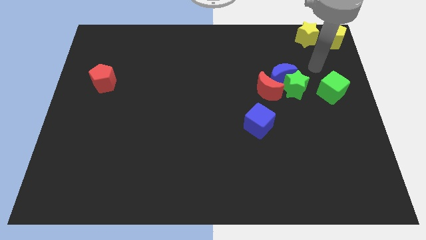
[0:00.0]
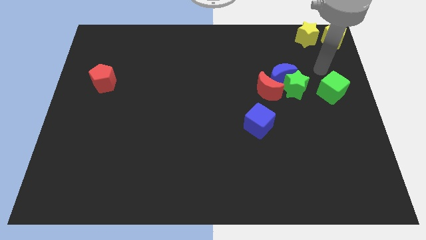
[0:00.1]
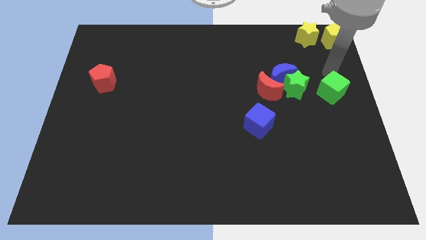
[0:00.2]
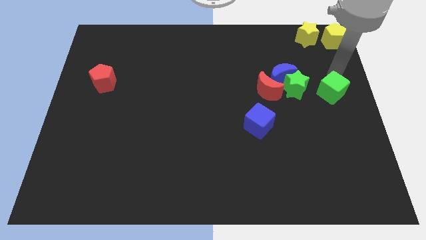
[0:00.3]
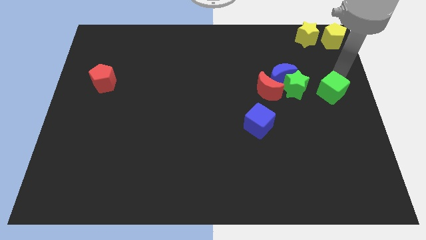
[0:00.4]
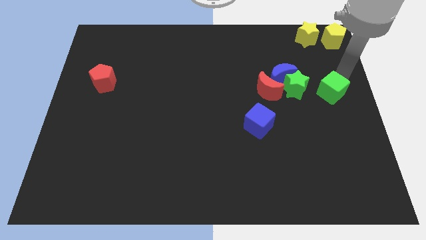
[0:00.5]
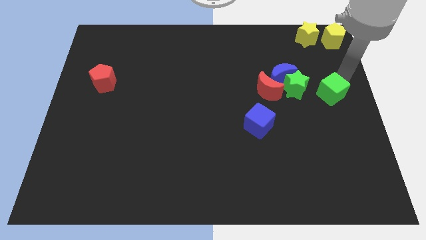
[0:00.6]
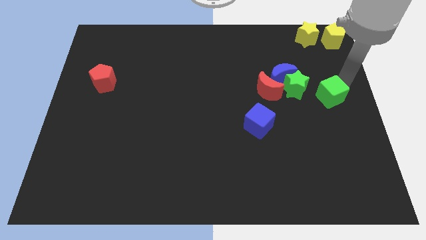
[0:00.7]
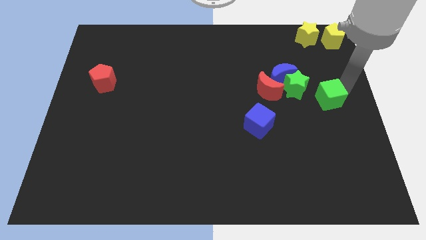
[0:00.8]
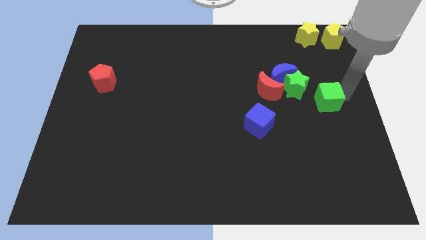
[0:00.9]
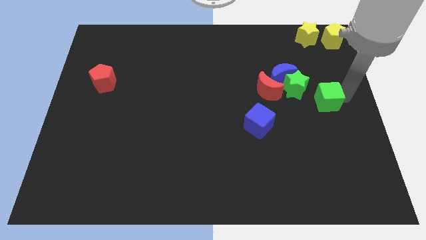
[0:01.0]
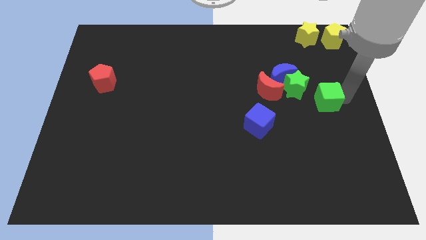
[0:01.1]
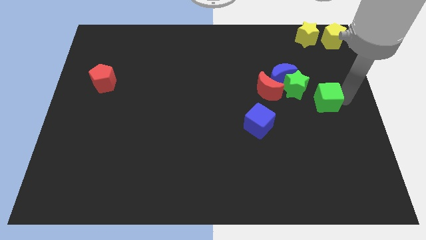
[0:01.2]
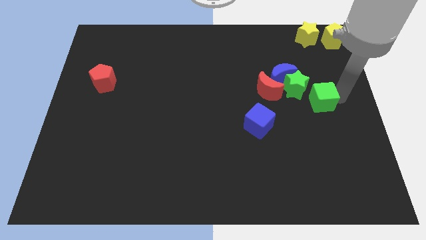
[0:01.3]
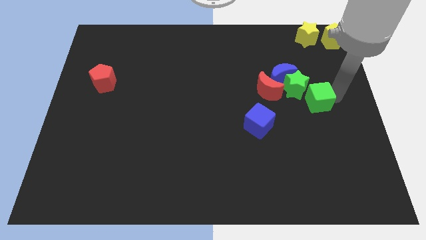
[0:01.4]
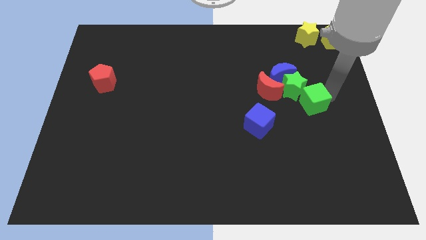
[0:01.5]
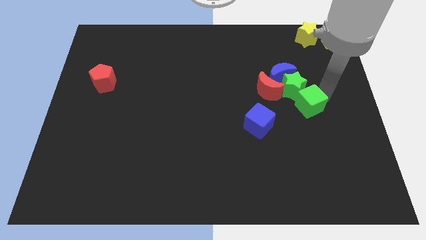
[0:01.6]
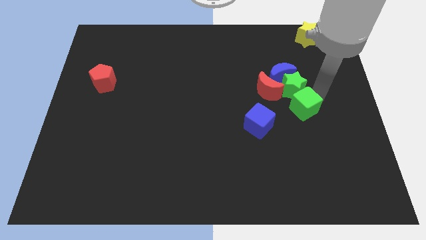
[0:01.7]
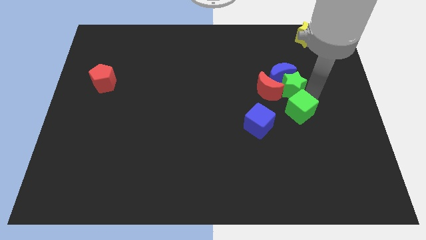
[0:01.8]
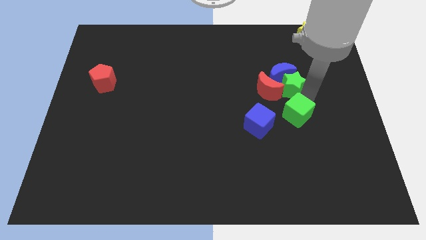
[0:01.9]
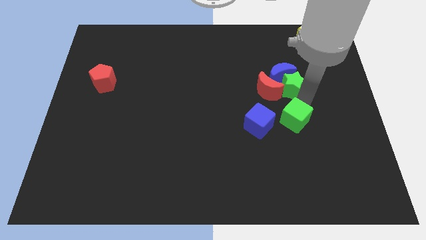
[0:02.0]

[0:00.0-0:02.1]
move the green cube to the bottom right side of the green star

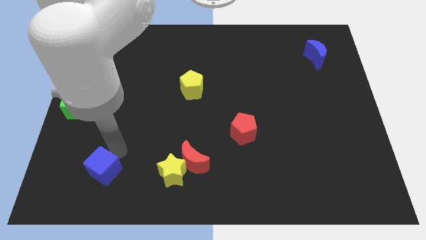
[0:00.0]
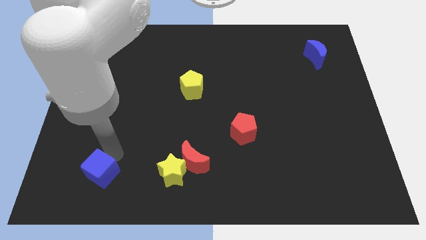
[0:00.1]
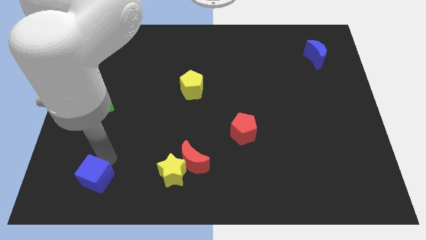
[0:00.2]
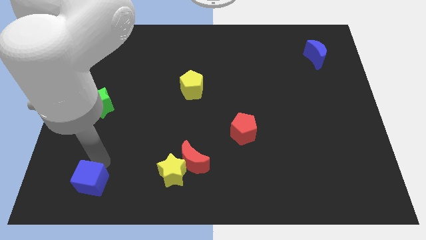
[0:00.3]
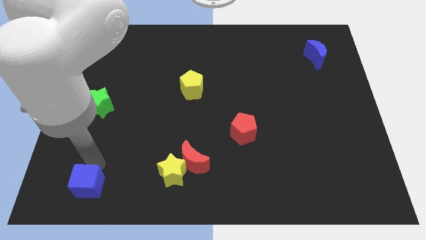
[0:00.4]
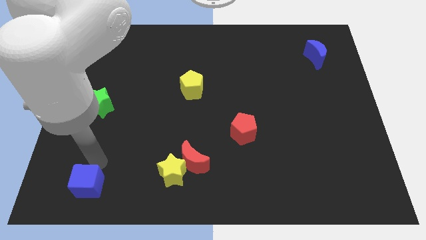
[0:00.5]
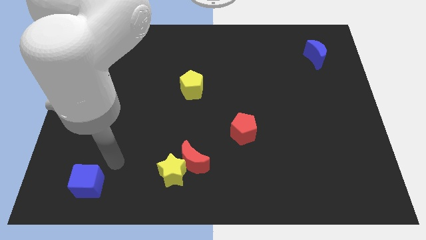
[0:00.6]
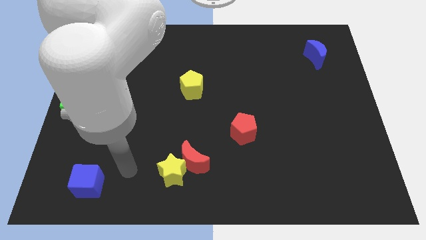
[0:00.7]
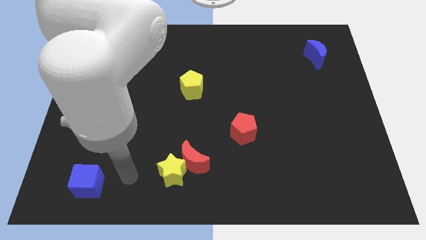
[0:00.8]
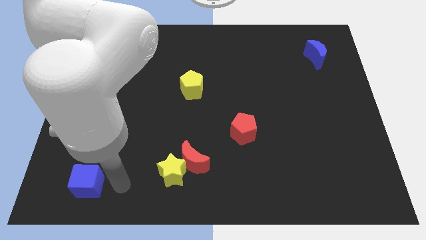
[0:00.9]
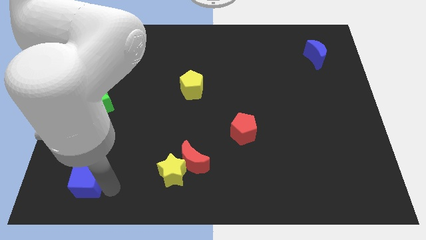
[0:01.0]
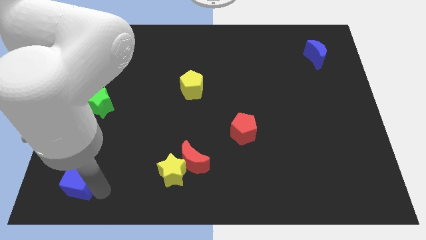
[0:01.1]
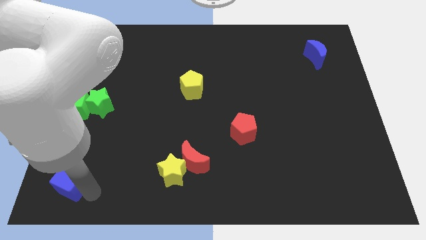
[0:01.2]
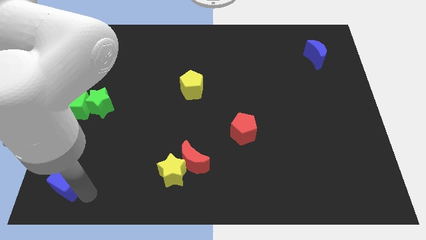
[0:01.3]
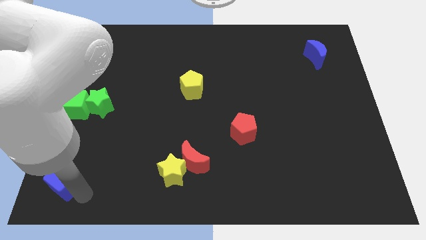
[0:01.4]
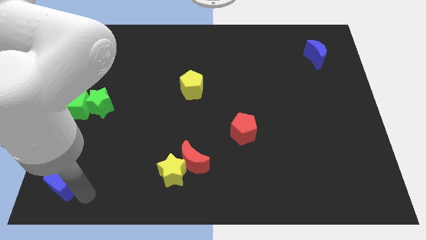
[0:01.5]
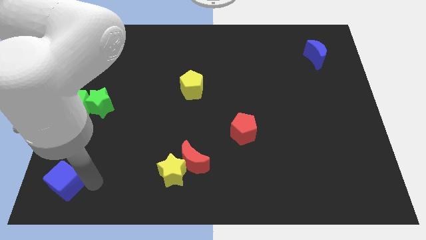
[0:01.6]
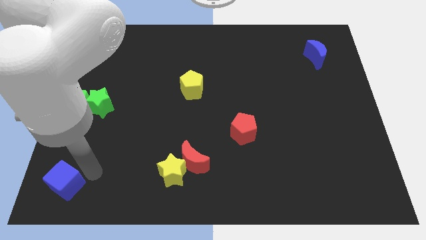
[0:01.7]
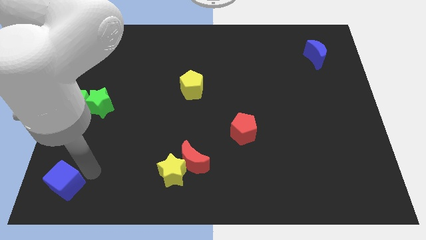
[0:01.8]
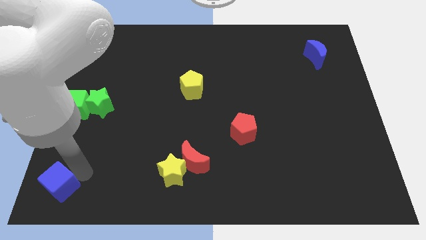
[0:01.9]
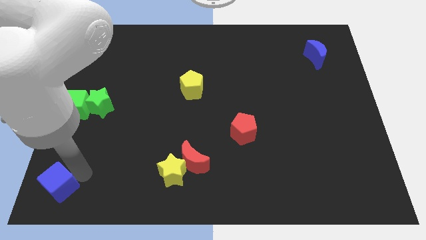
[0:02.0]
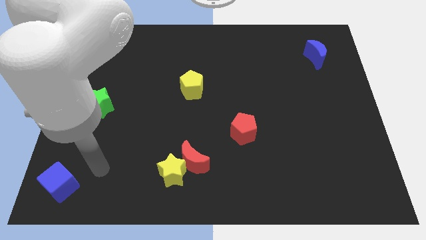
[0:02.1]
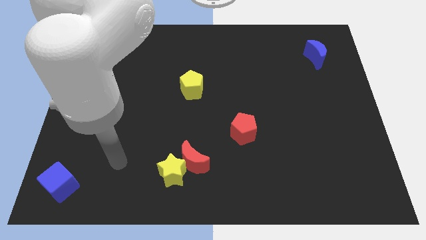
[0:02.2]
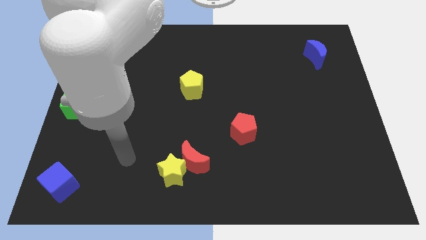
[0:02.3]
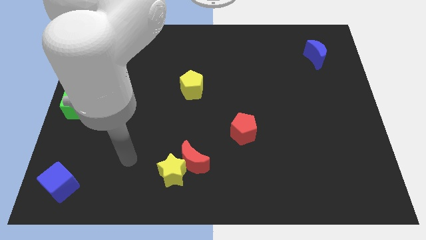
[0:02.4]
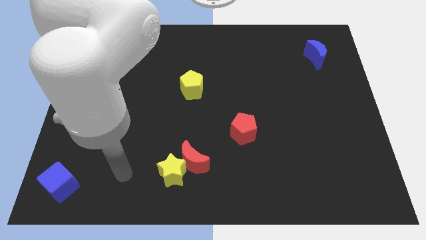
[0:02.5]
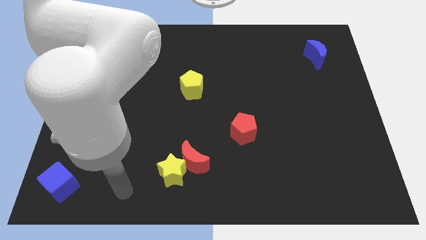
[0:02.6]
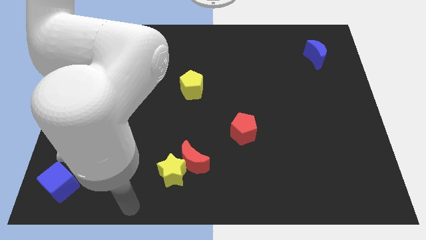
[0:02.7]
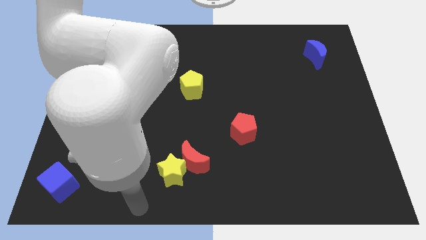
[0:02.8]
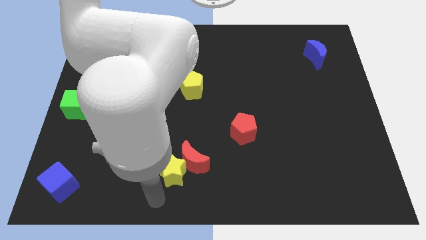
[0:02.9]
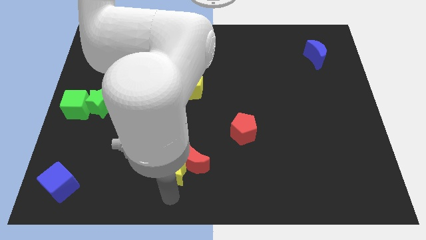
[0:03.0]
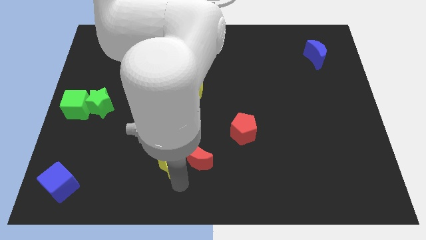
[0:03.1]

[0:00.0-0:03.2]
place the blue cube vertically below the green cube

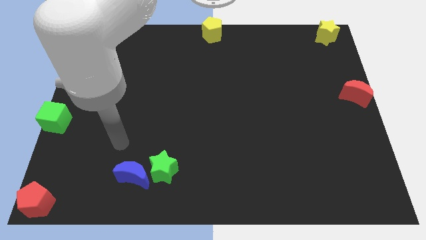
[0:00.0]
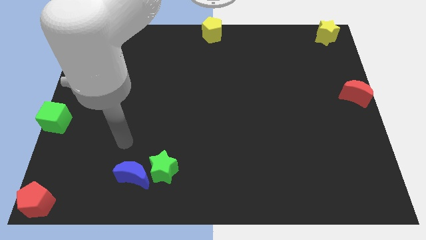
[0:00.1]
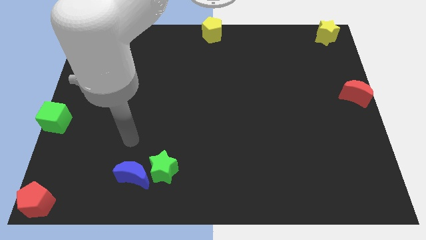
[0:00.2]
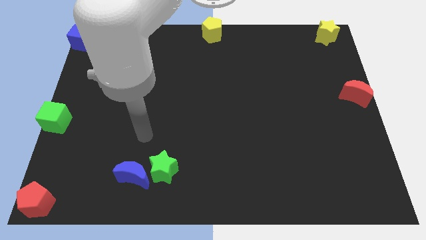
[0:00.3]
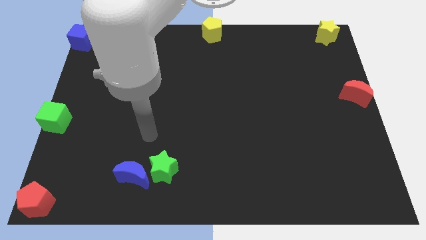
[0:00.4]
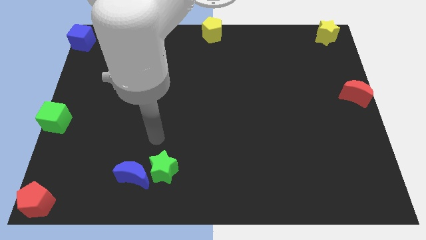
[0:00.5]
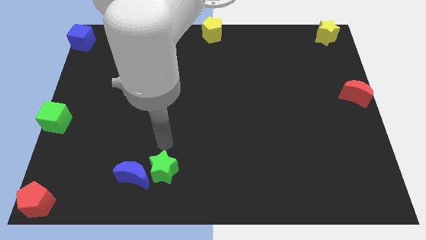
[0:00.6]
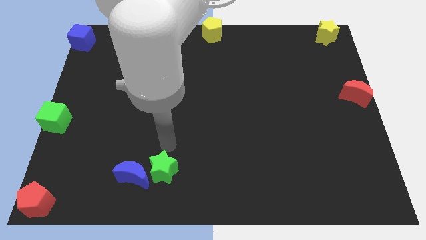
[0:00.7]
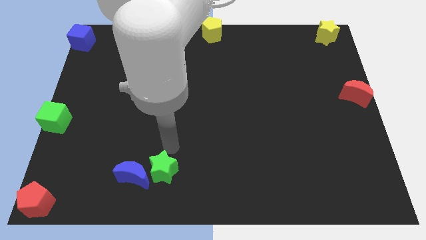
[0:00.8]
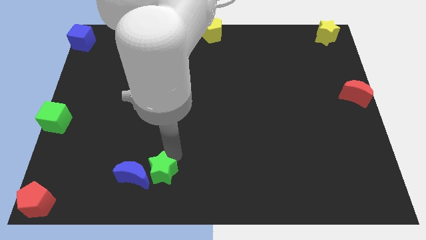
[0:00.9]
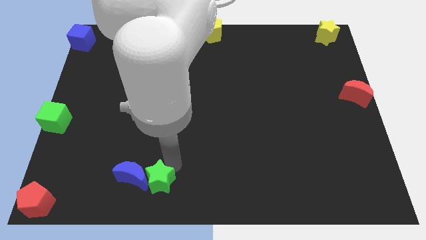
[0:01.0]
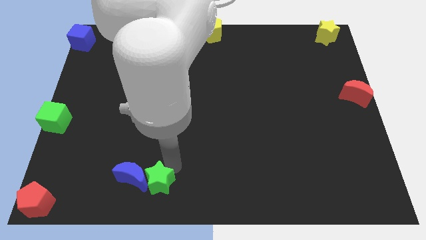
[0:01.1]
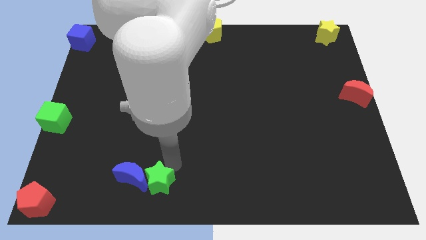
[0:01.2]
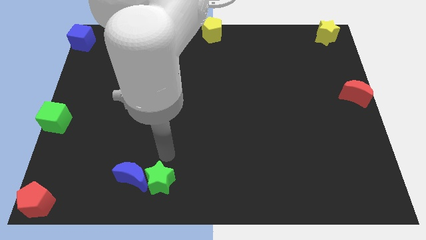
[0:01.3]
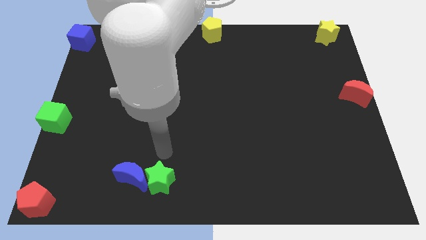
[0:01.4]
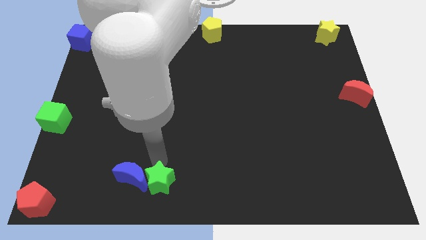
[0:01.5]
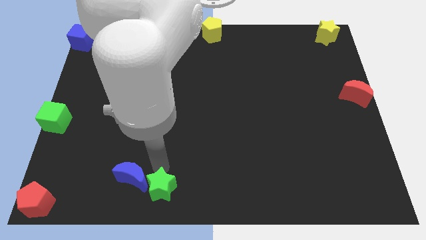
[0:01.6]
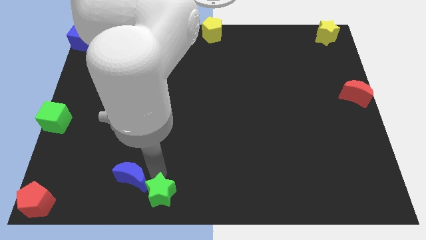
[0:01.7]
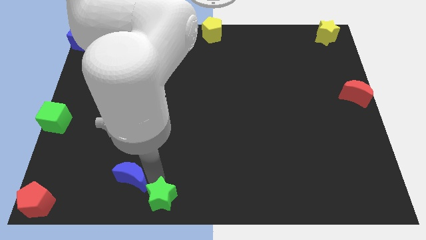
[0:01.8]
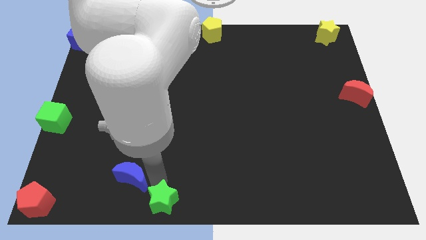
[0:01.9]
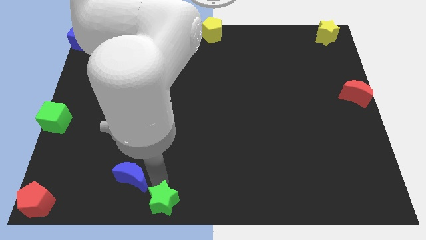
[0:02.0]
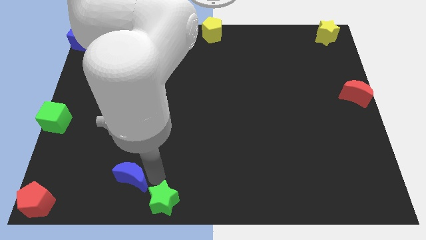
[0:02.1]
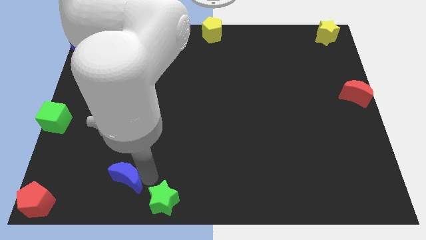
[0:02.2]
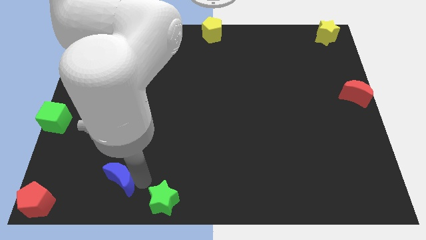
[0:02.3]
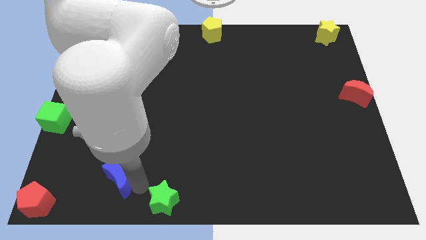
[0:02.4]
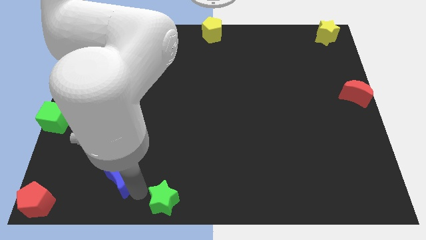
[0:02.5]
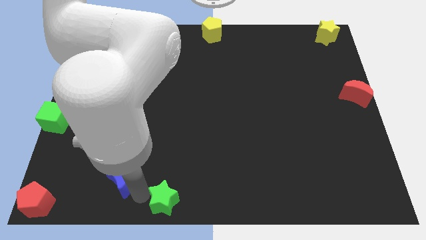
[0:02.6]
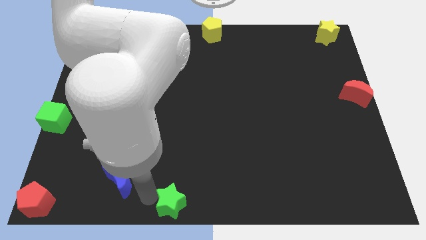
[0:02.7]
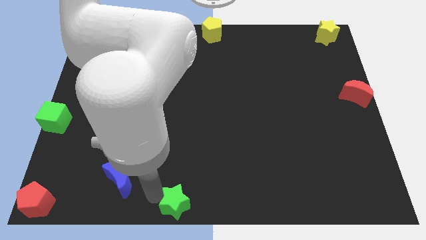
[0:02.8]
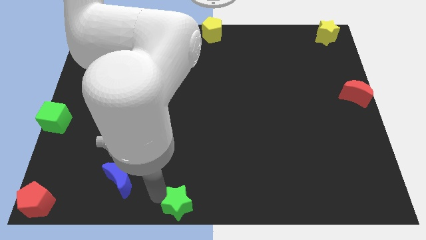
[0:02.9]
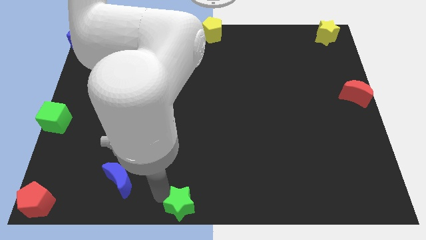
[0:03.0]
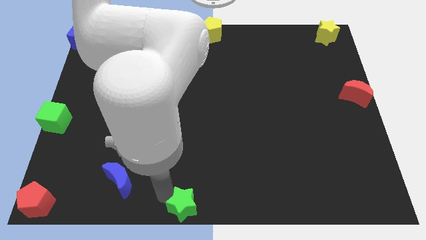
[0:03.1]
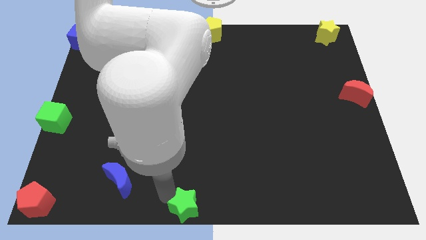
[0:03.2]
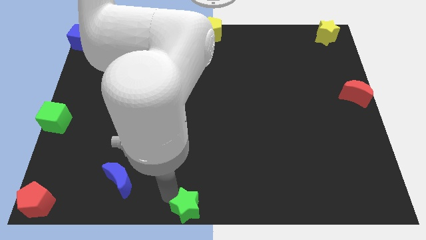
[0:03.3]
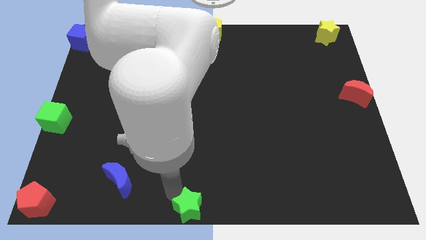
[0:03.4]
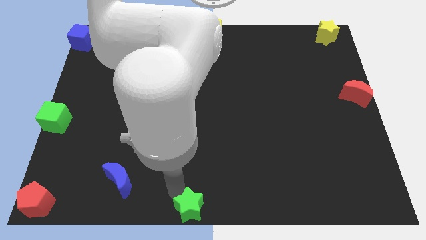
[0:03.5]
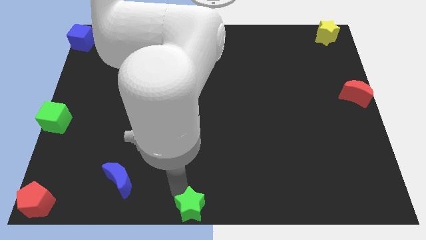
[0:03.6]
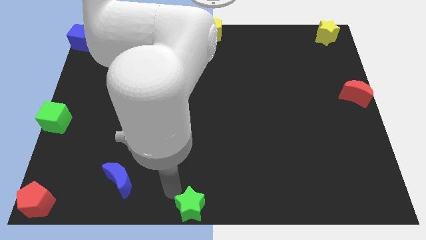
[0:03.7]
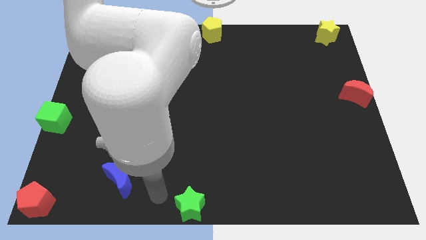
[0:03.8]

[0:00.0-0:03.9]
move the green star to the bottom center of the board
